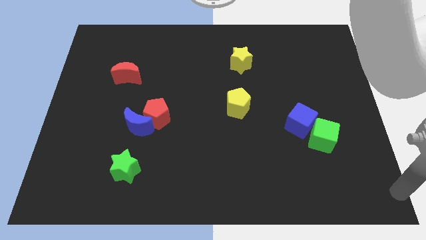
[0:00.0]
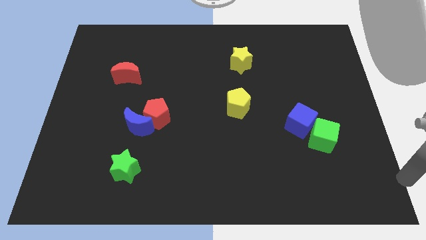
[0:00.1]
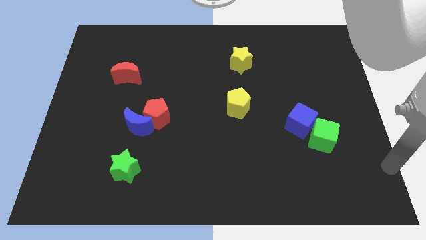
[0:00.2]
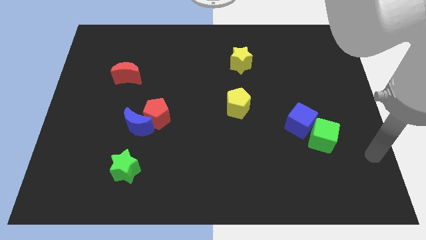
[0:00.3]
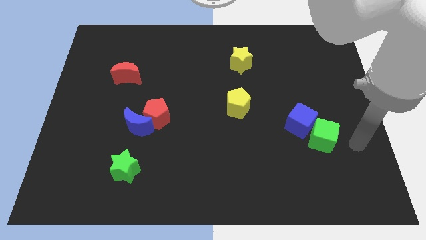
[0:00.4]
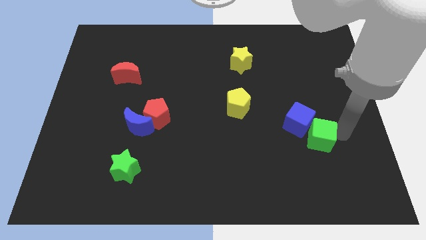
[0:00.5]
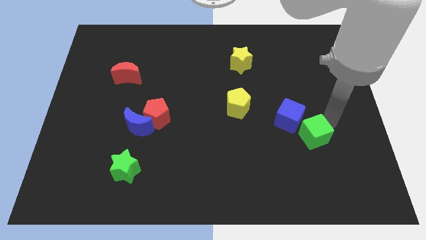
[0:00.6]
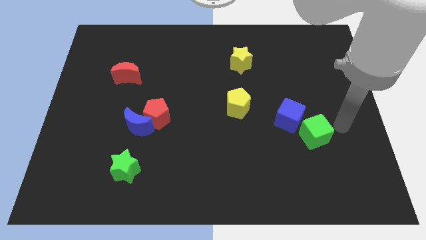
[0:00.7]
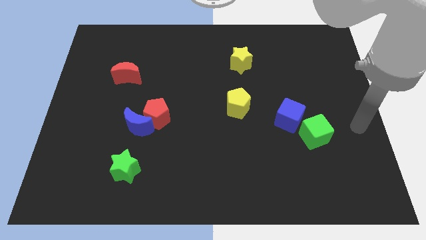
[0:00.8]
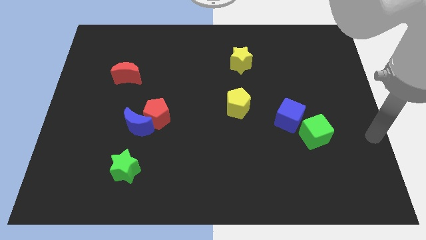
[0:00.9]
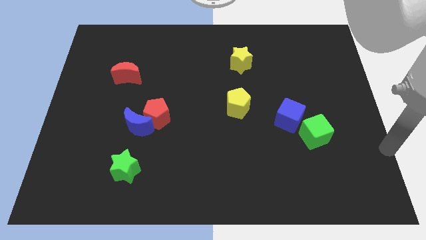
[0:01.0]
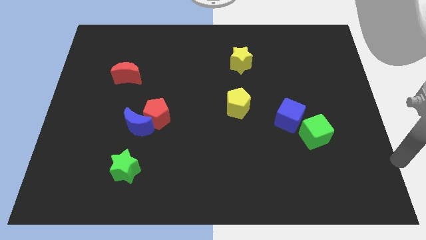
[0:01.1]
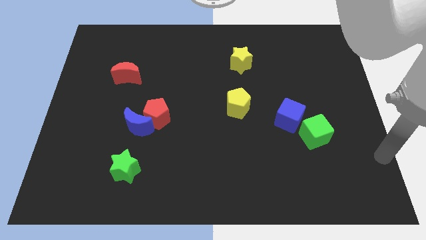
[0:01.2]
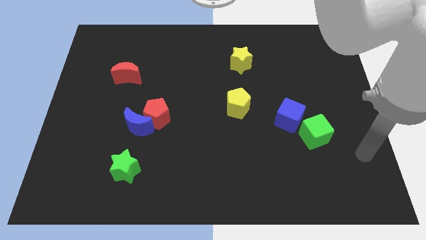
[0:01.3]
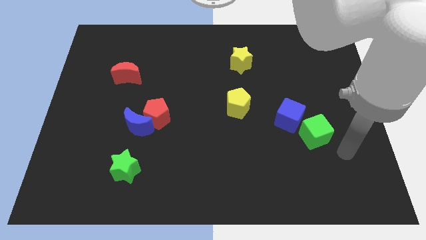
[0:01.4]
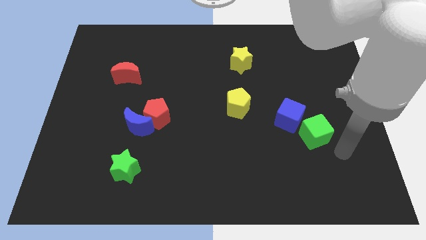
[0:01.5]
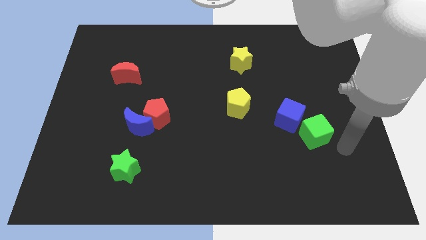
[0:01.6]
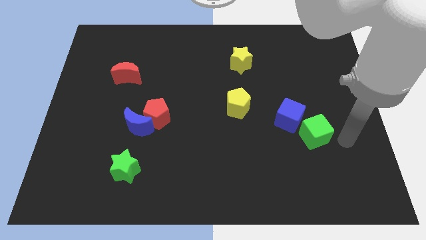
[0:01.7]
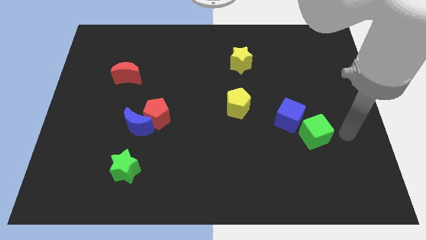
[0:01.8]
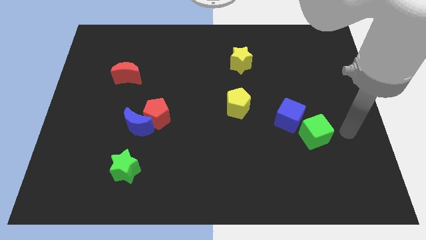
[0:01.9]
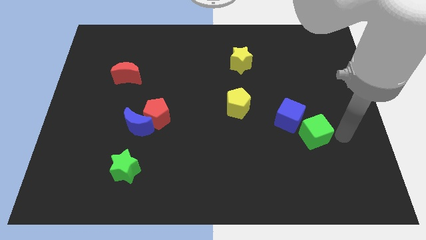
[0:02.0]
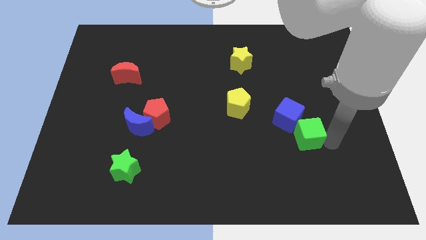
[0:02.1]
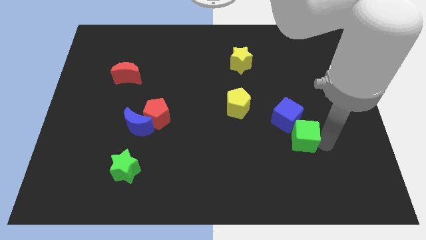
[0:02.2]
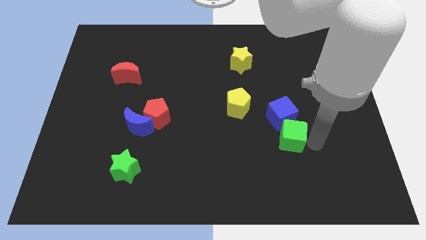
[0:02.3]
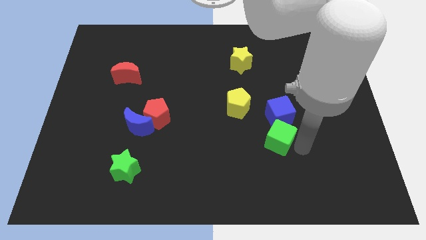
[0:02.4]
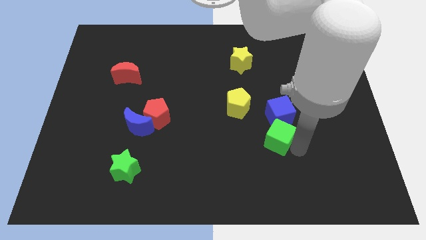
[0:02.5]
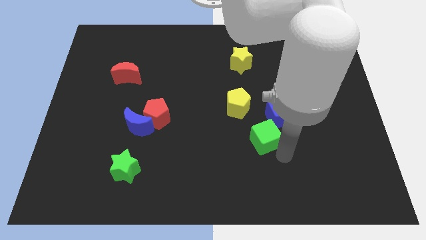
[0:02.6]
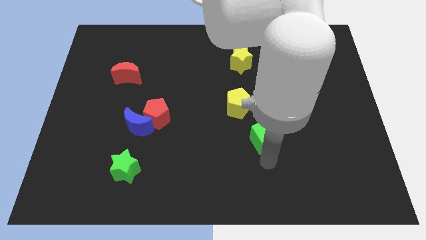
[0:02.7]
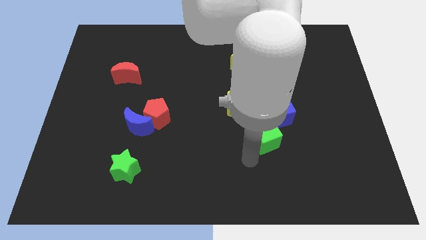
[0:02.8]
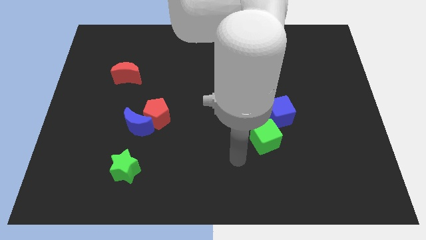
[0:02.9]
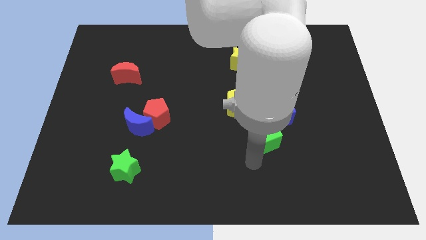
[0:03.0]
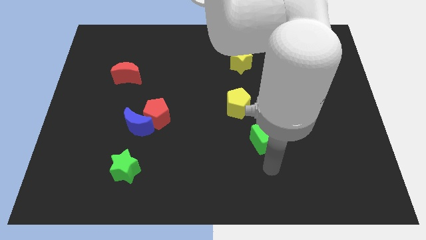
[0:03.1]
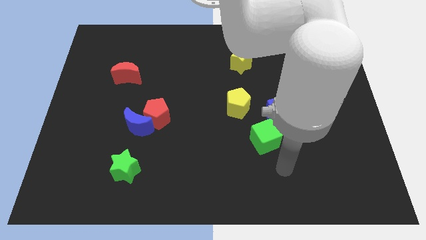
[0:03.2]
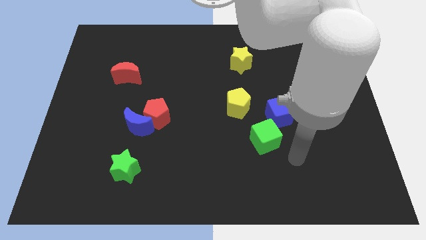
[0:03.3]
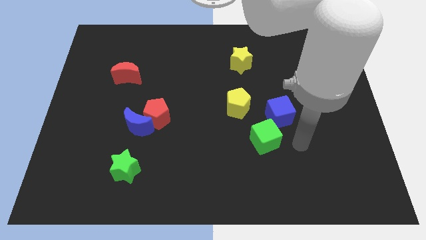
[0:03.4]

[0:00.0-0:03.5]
place the green cube below the blue cube

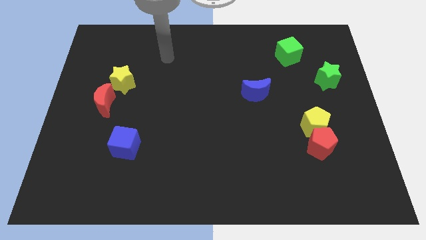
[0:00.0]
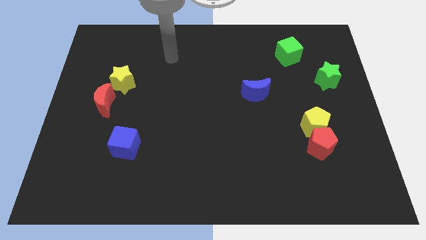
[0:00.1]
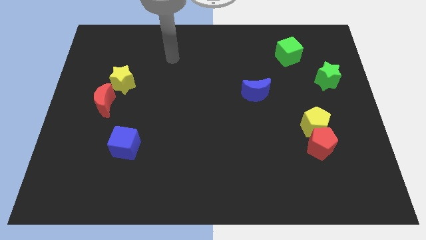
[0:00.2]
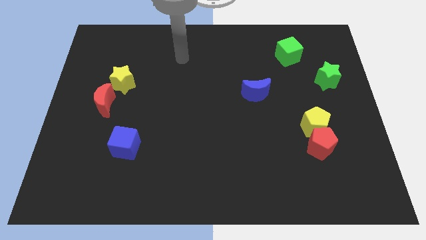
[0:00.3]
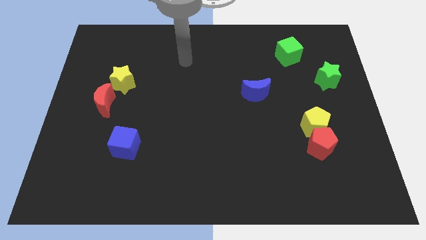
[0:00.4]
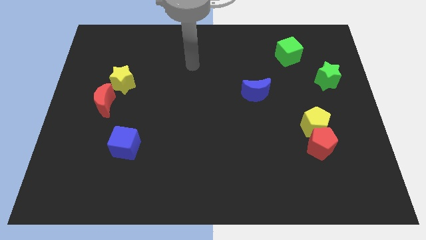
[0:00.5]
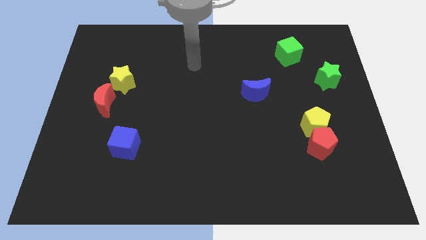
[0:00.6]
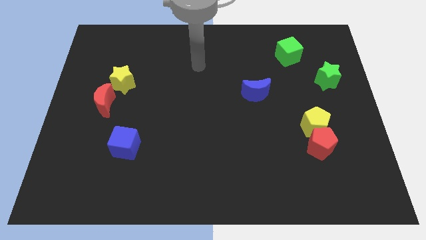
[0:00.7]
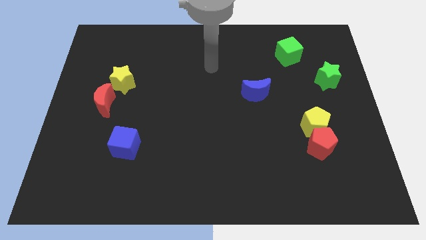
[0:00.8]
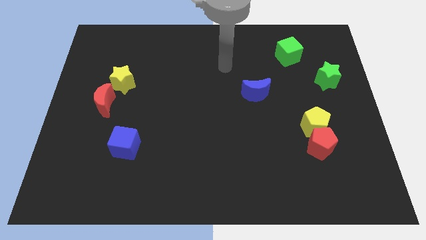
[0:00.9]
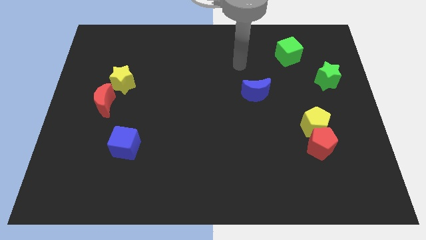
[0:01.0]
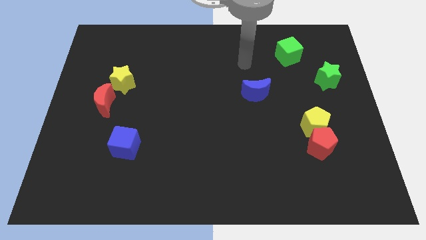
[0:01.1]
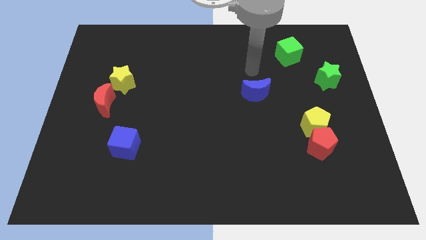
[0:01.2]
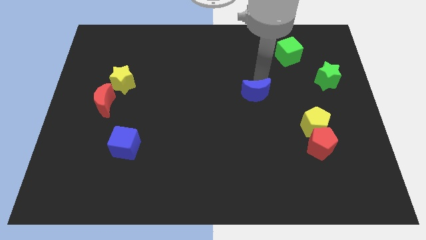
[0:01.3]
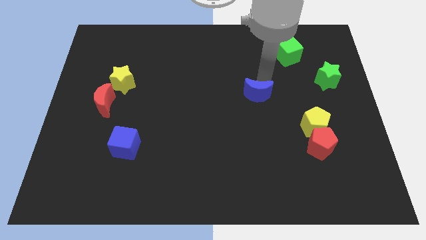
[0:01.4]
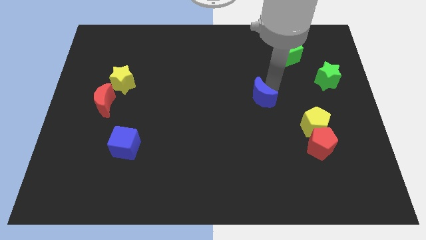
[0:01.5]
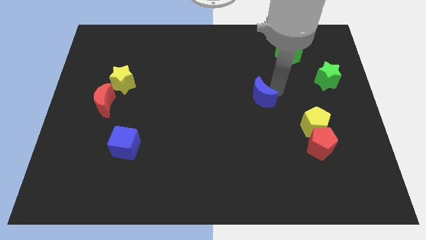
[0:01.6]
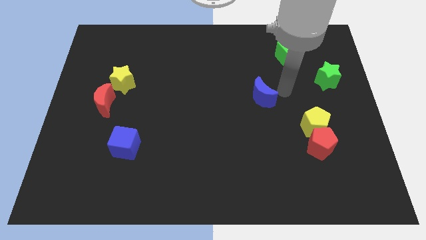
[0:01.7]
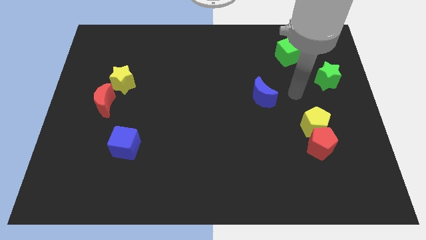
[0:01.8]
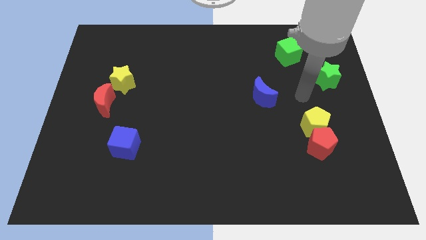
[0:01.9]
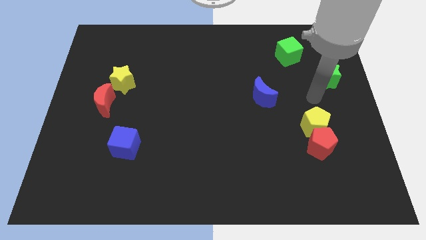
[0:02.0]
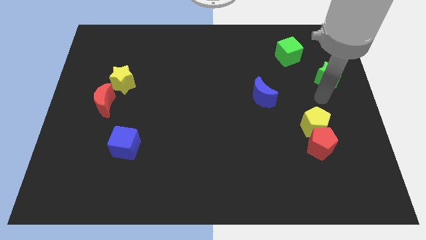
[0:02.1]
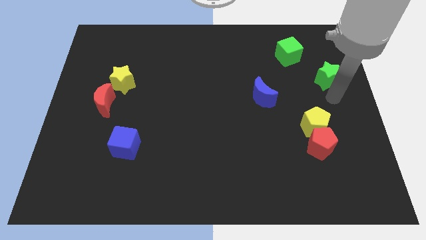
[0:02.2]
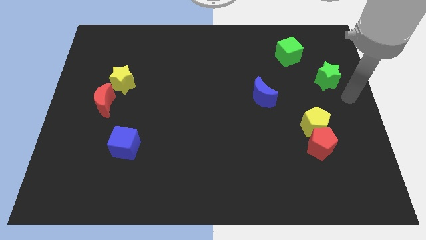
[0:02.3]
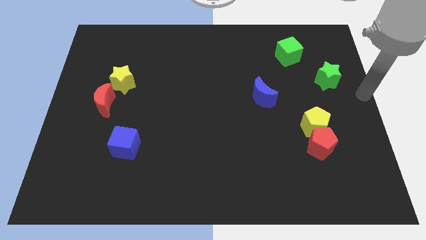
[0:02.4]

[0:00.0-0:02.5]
tap the blue moon

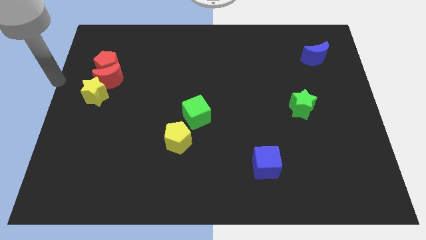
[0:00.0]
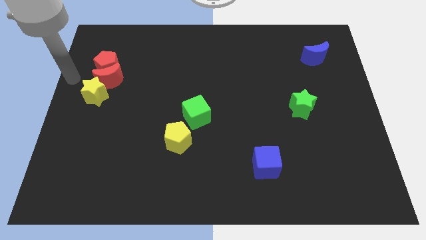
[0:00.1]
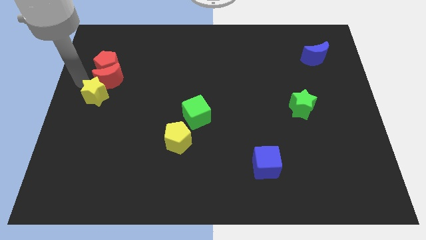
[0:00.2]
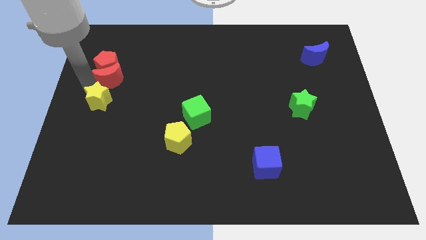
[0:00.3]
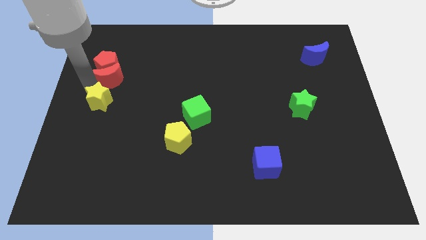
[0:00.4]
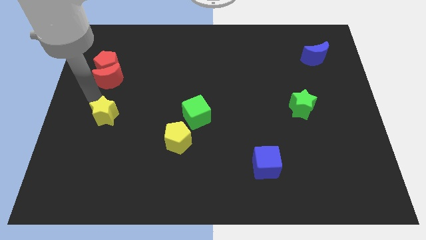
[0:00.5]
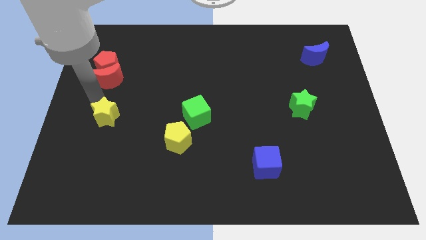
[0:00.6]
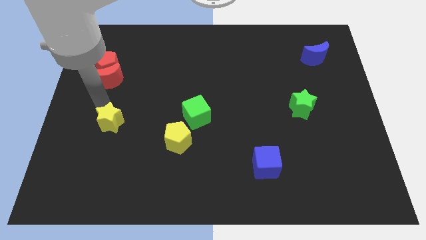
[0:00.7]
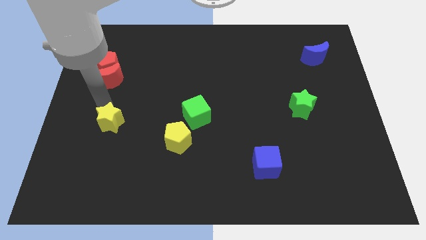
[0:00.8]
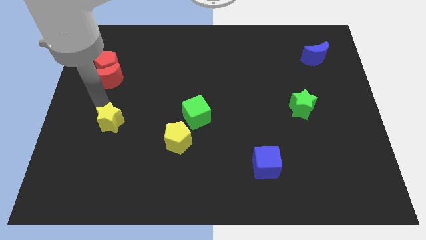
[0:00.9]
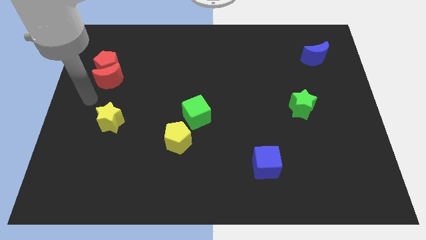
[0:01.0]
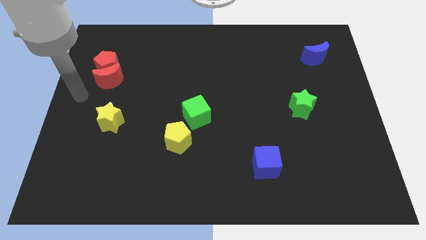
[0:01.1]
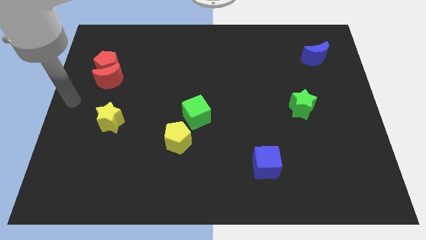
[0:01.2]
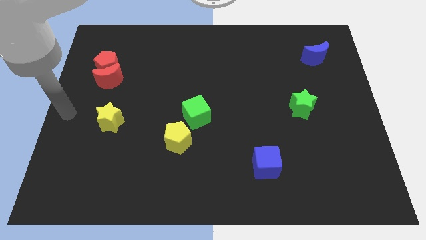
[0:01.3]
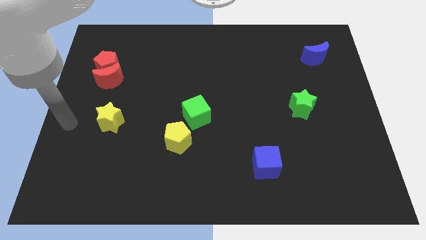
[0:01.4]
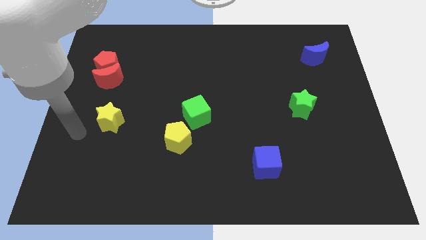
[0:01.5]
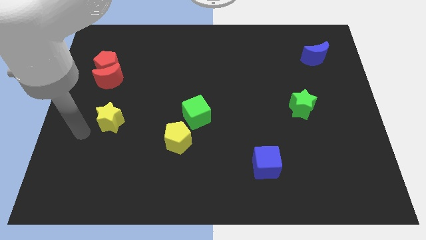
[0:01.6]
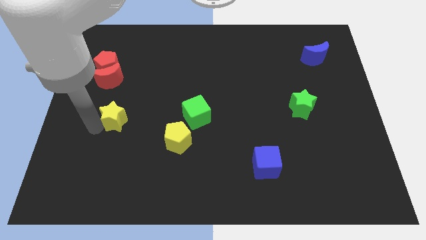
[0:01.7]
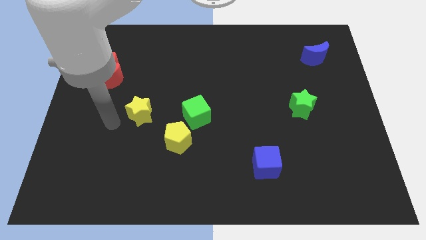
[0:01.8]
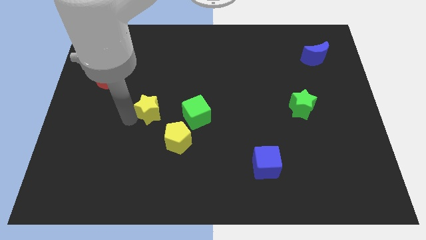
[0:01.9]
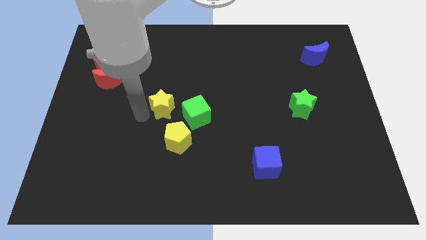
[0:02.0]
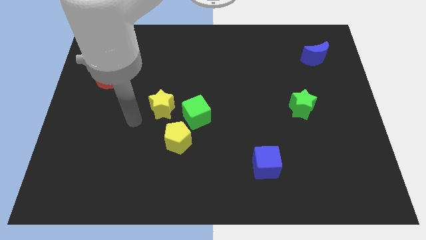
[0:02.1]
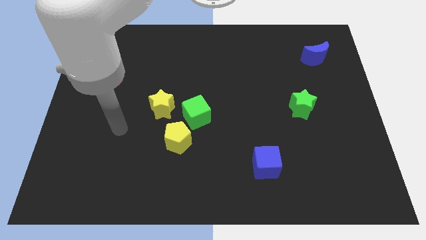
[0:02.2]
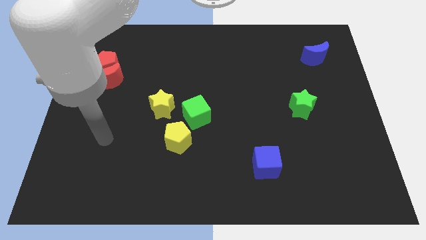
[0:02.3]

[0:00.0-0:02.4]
move the yellow block to the left of green cube

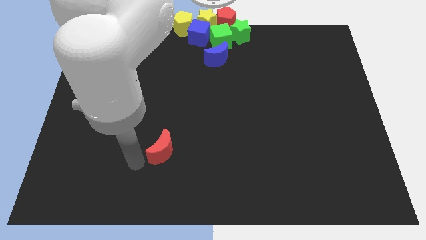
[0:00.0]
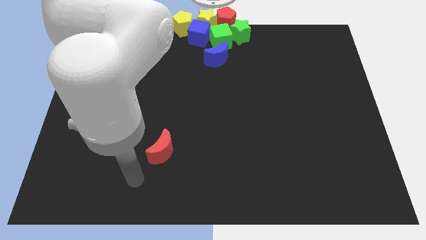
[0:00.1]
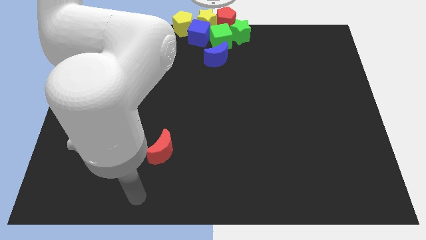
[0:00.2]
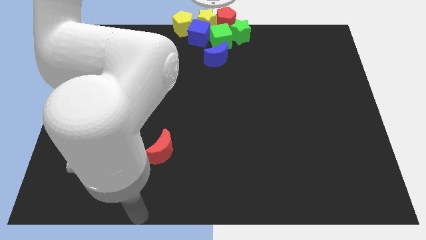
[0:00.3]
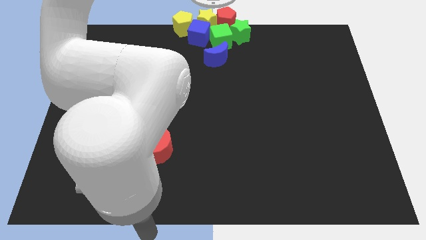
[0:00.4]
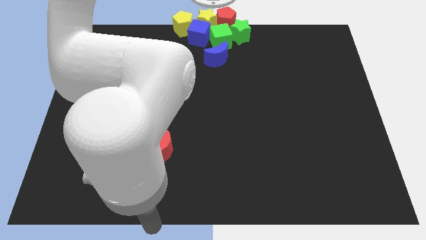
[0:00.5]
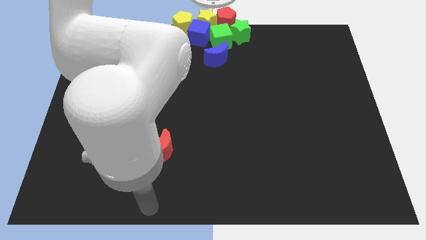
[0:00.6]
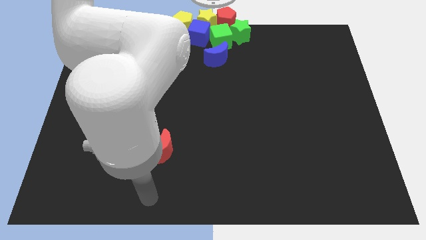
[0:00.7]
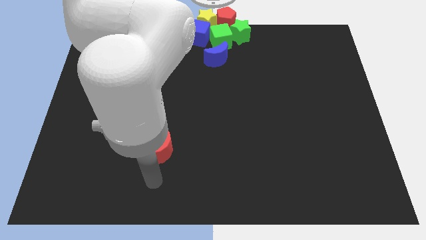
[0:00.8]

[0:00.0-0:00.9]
move your arm to the bottom of the red crescent
